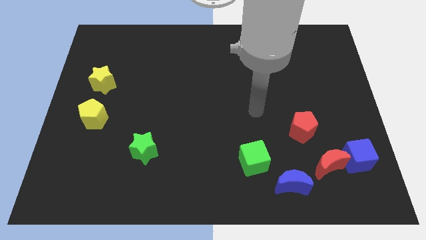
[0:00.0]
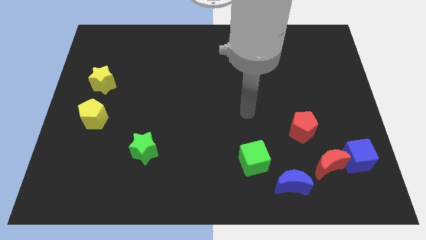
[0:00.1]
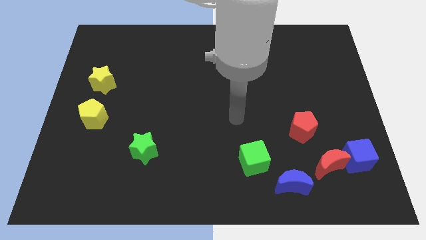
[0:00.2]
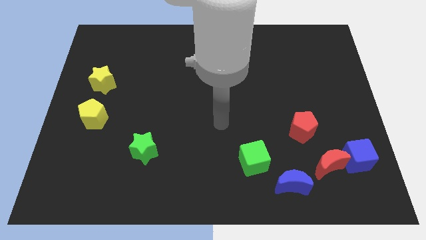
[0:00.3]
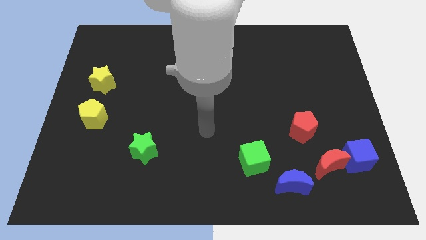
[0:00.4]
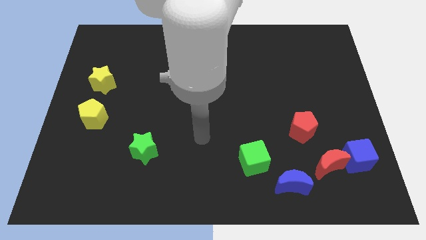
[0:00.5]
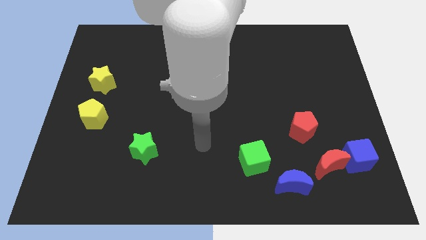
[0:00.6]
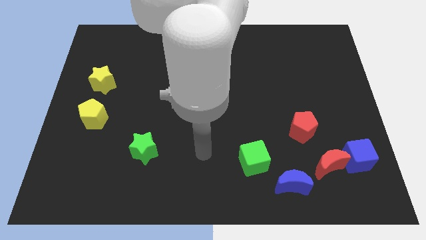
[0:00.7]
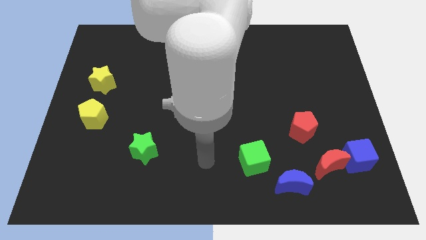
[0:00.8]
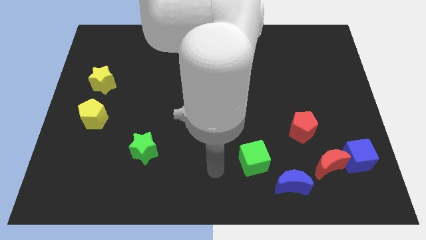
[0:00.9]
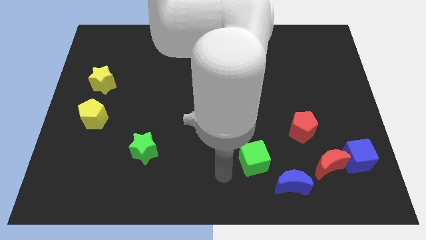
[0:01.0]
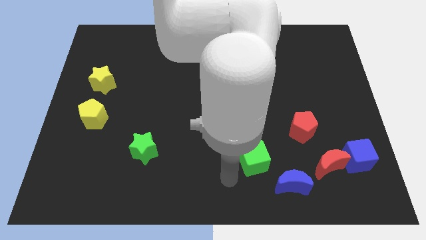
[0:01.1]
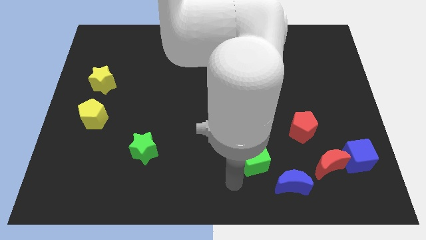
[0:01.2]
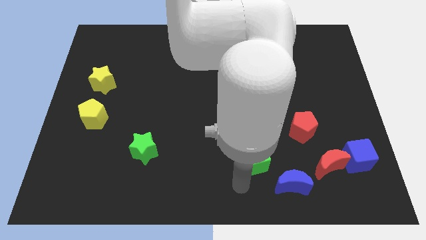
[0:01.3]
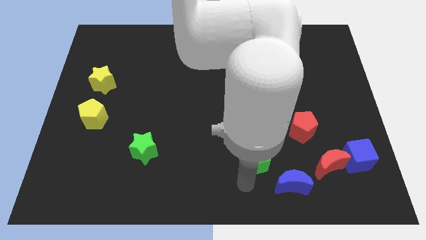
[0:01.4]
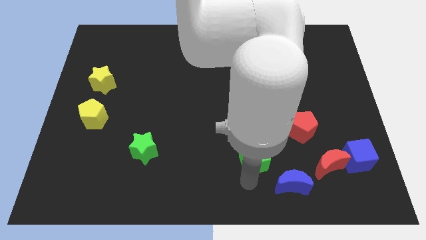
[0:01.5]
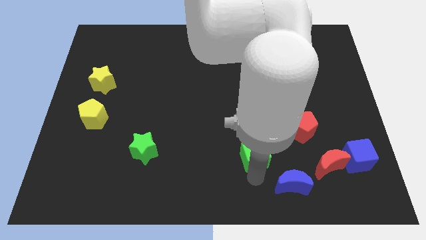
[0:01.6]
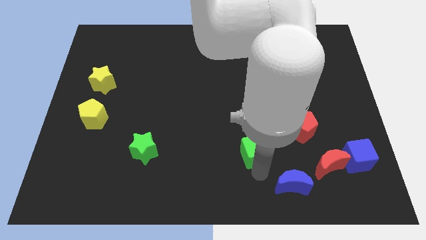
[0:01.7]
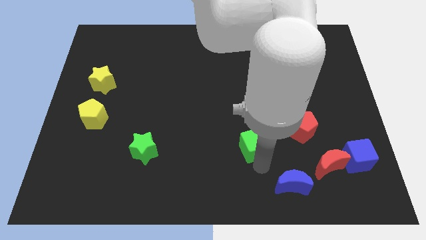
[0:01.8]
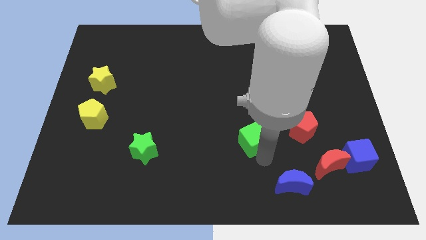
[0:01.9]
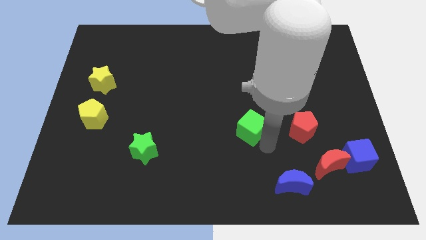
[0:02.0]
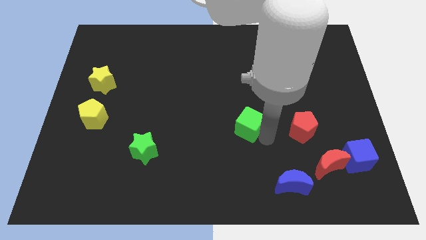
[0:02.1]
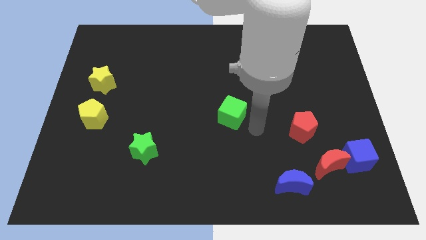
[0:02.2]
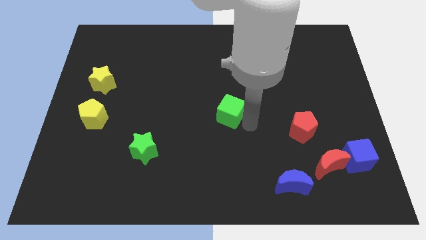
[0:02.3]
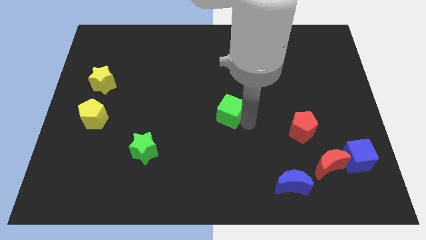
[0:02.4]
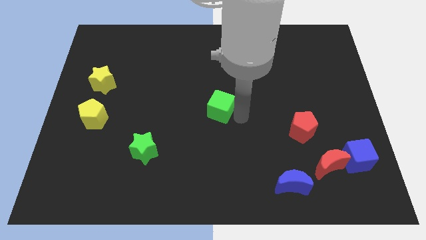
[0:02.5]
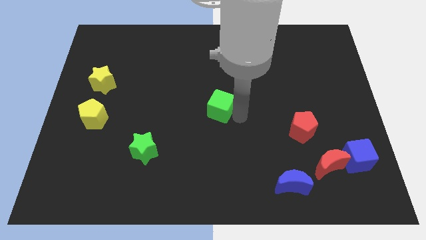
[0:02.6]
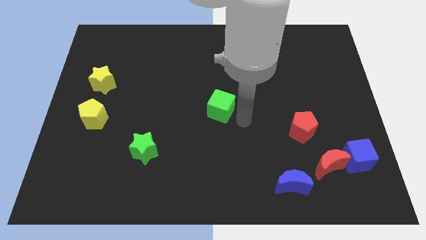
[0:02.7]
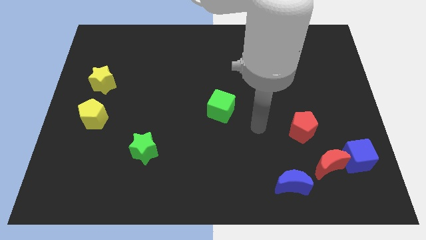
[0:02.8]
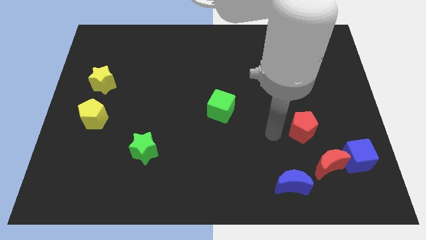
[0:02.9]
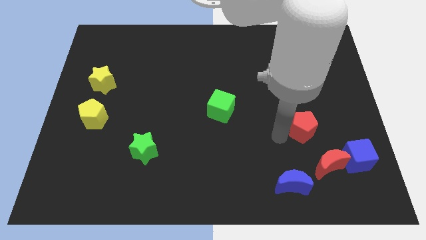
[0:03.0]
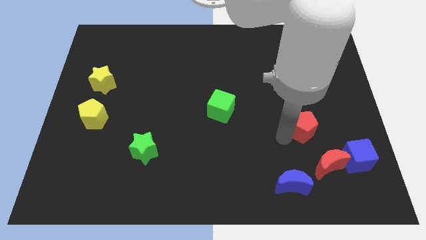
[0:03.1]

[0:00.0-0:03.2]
move the green cube to the center of the board

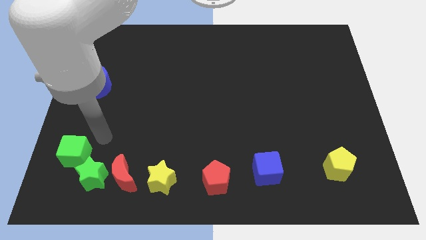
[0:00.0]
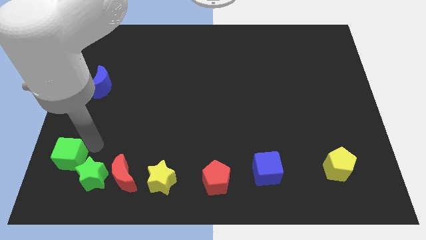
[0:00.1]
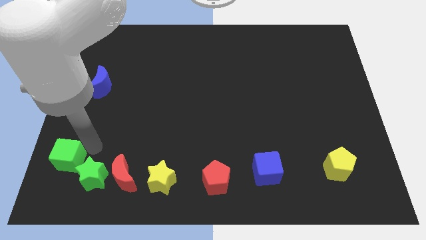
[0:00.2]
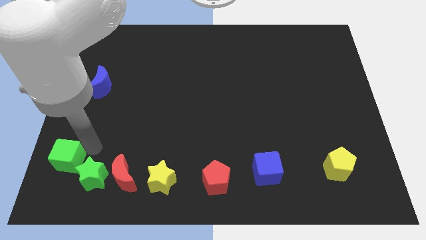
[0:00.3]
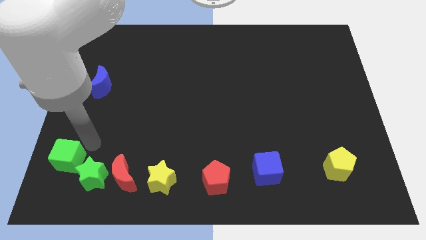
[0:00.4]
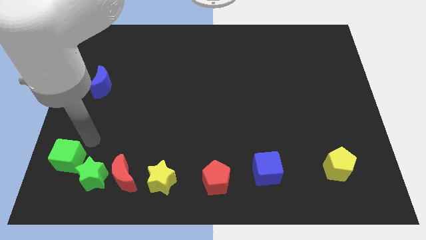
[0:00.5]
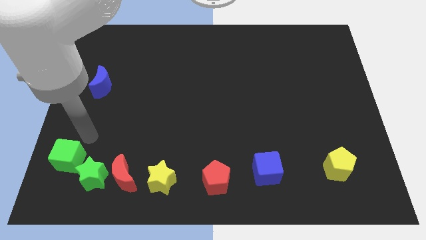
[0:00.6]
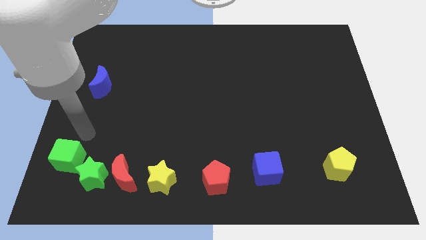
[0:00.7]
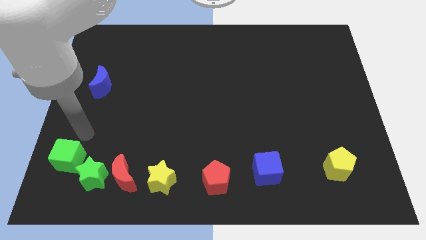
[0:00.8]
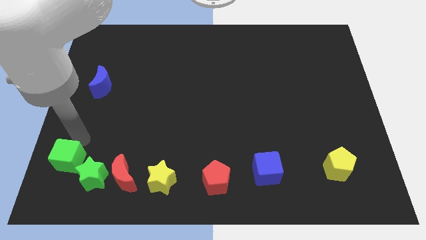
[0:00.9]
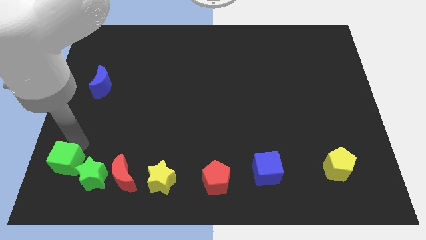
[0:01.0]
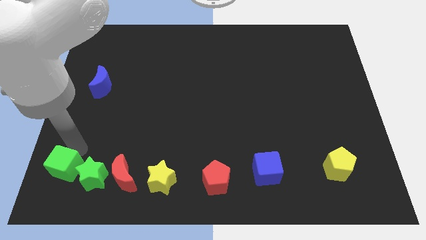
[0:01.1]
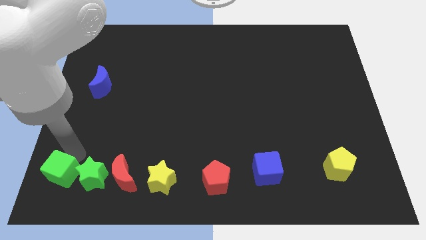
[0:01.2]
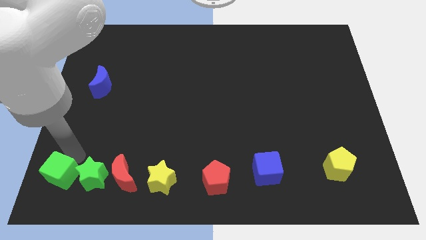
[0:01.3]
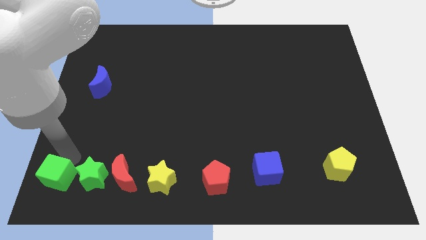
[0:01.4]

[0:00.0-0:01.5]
move the green cube to the left of green star

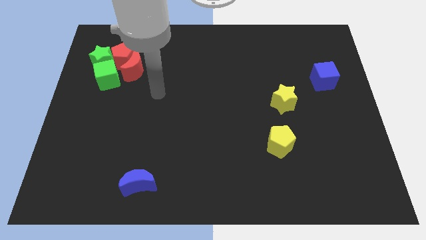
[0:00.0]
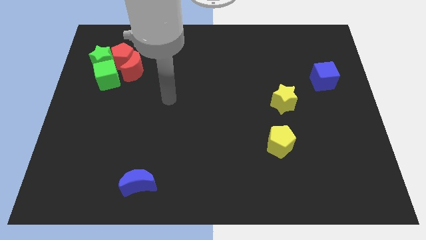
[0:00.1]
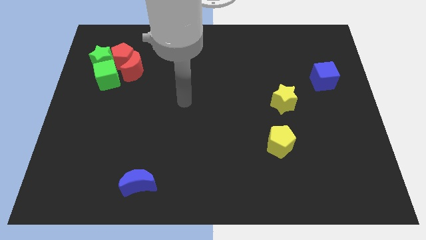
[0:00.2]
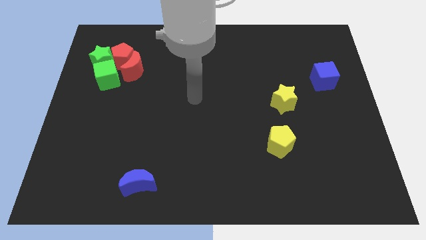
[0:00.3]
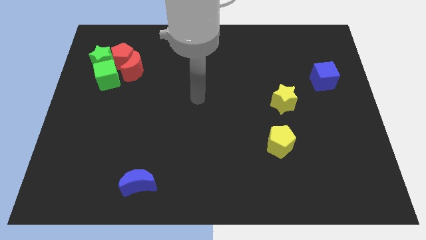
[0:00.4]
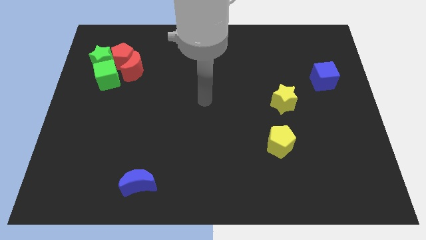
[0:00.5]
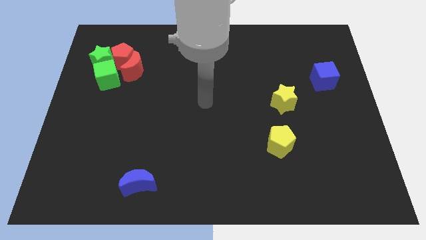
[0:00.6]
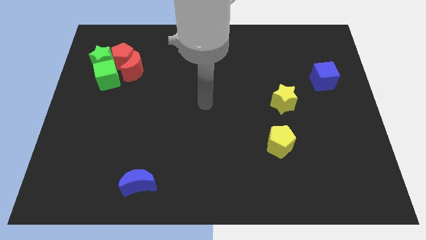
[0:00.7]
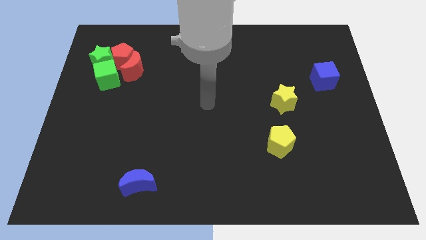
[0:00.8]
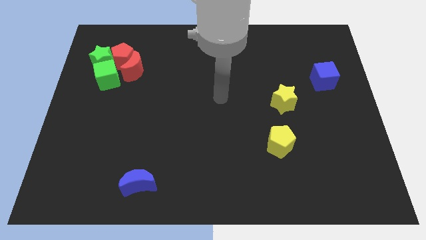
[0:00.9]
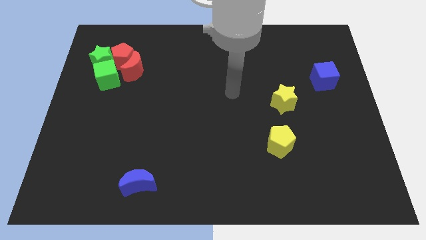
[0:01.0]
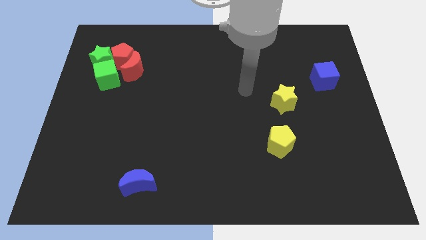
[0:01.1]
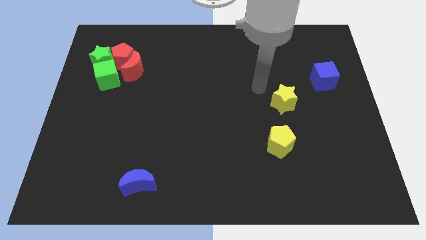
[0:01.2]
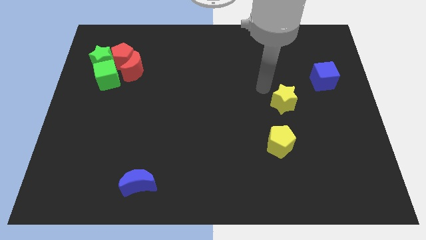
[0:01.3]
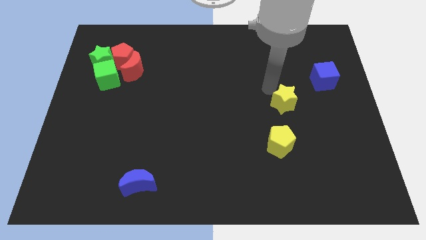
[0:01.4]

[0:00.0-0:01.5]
point your arm at the top left of the yellow star

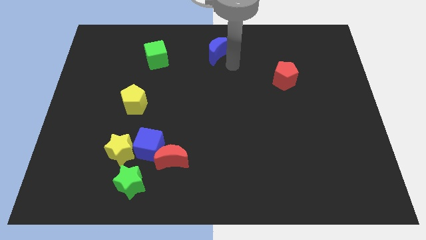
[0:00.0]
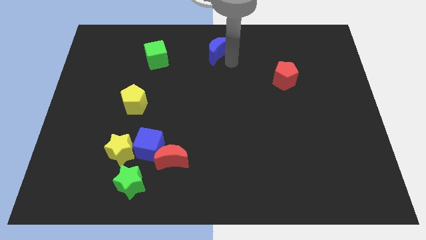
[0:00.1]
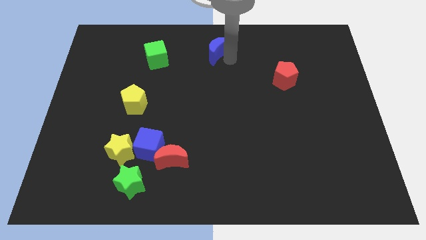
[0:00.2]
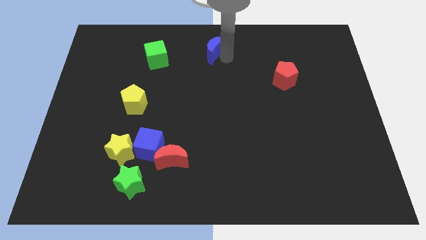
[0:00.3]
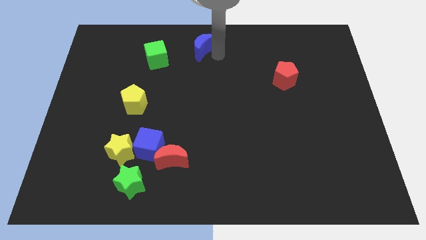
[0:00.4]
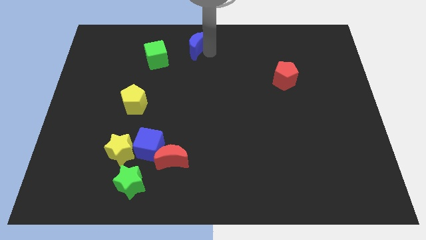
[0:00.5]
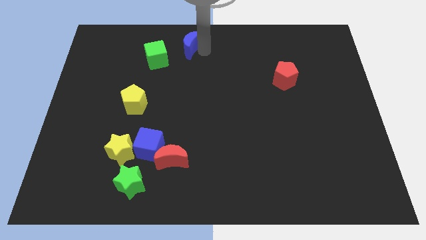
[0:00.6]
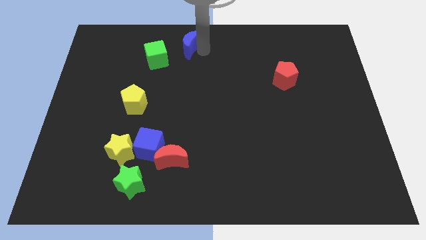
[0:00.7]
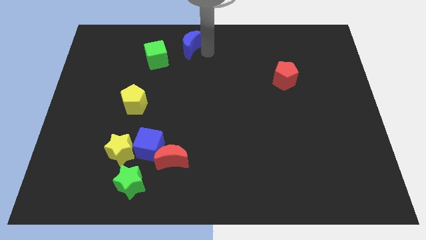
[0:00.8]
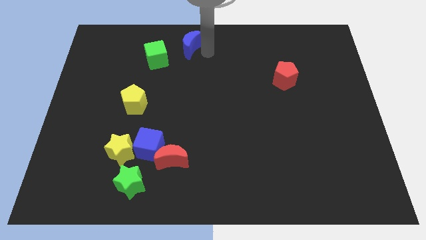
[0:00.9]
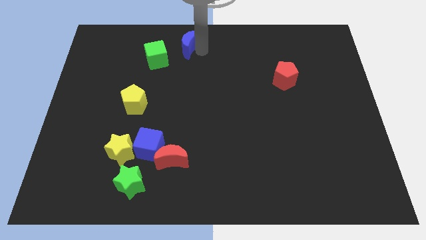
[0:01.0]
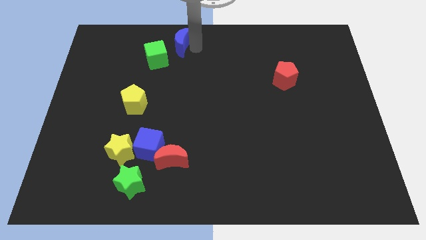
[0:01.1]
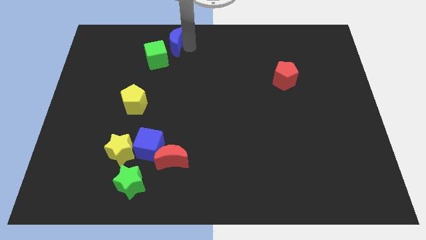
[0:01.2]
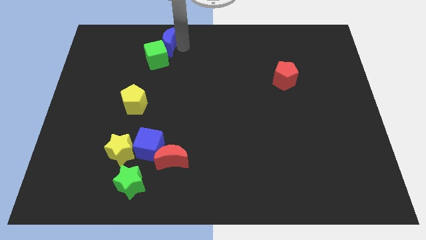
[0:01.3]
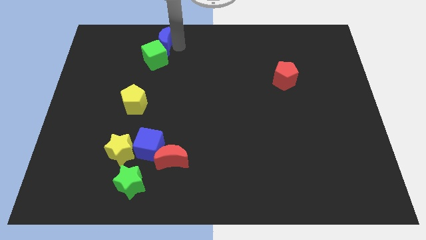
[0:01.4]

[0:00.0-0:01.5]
place the blue crescent to the top right of the green cube

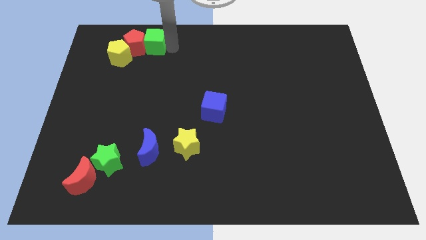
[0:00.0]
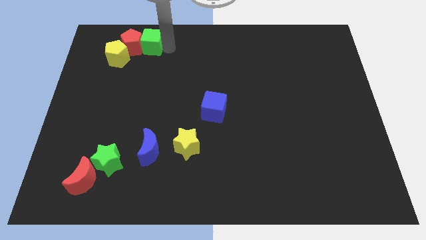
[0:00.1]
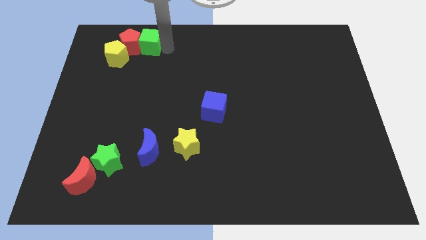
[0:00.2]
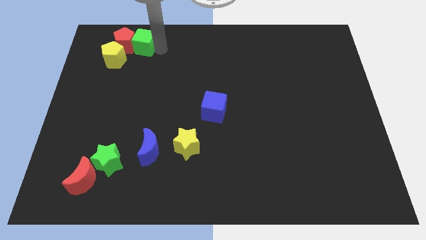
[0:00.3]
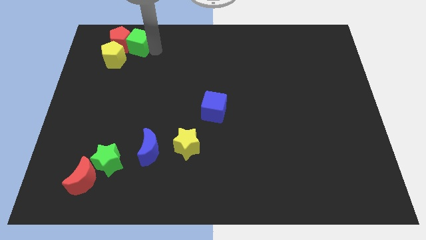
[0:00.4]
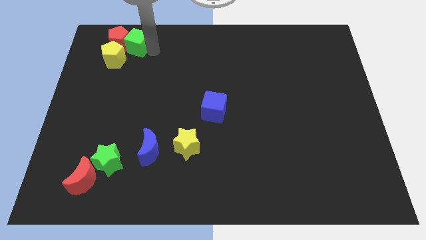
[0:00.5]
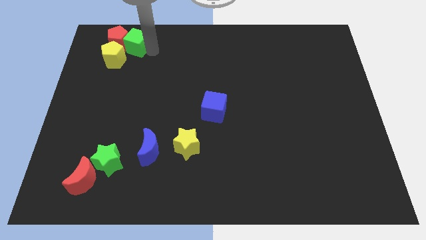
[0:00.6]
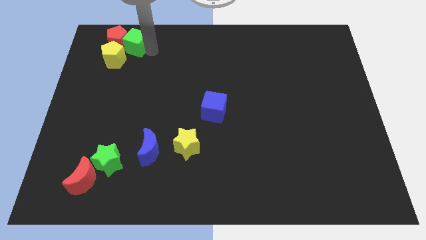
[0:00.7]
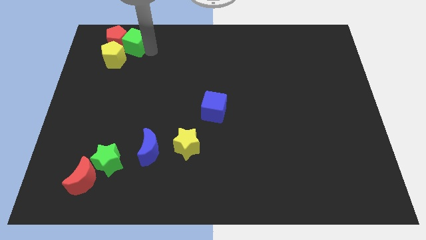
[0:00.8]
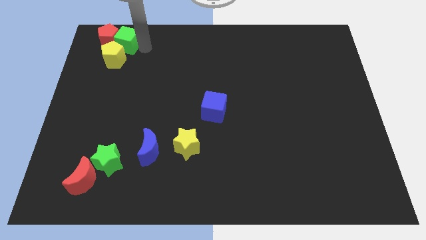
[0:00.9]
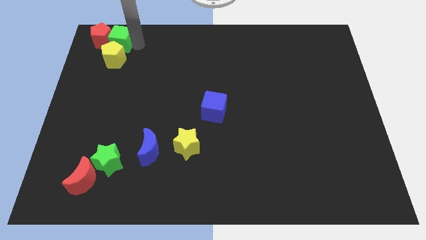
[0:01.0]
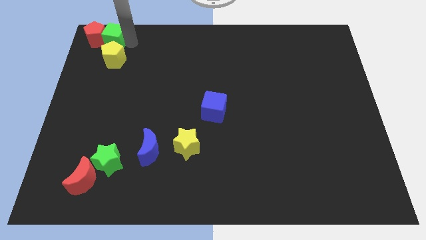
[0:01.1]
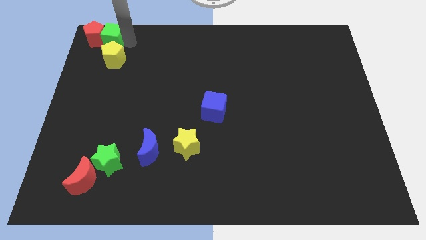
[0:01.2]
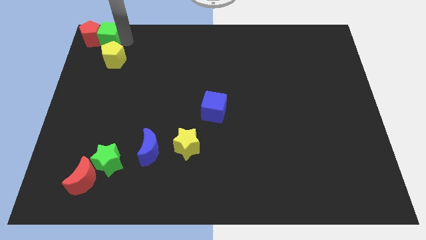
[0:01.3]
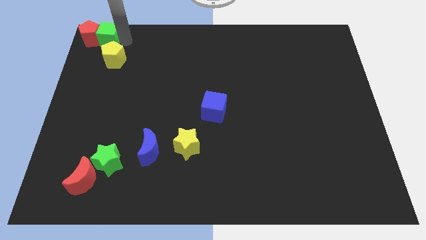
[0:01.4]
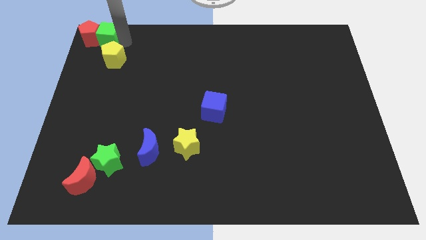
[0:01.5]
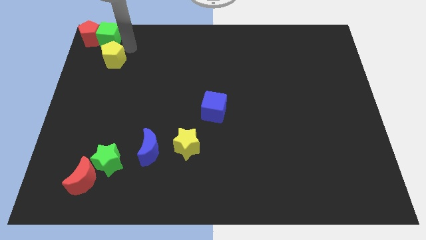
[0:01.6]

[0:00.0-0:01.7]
move the red pentagon and green cube to the top left corner of the board
